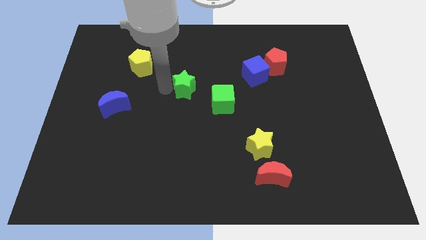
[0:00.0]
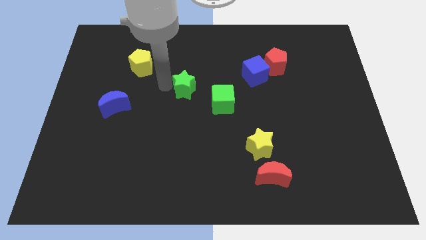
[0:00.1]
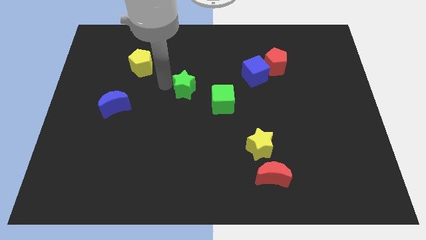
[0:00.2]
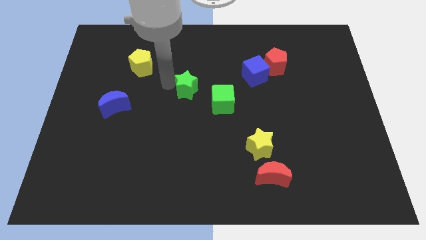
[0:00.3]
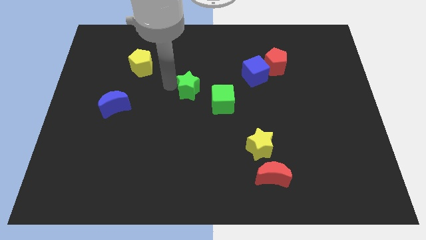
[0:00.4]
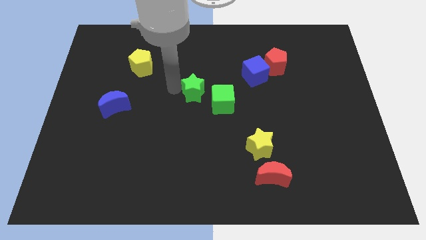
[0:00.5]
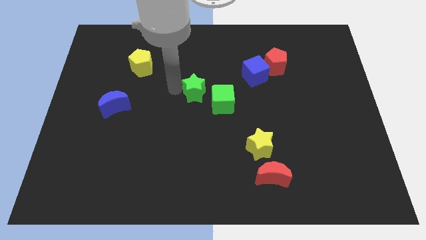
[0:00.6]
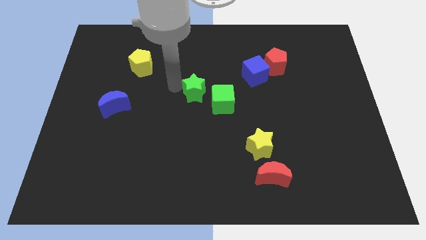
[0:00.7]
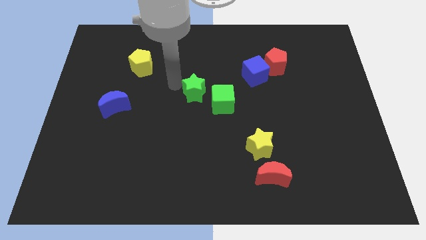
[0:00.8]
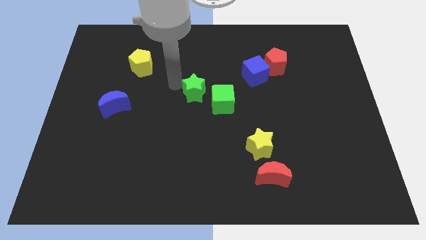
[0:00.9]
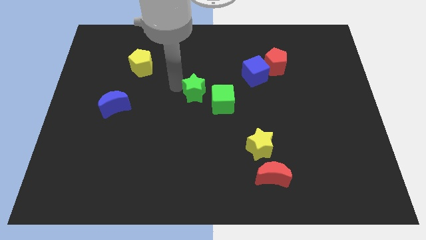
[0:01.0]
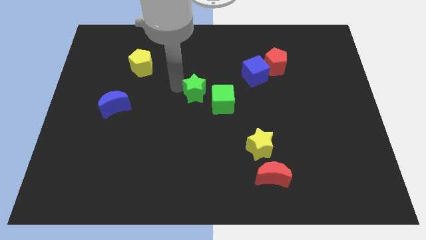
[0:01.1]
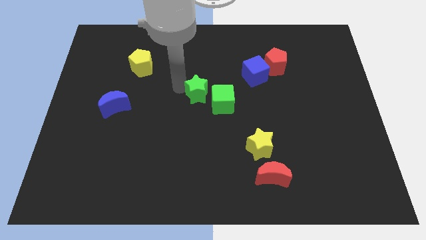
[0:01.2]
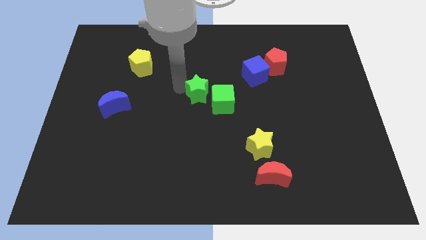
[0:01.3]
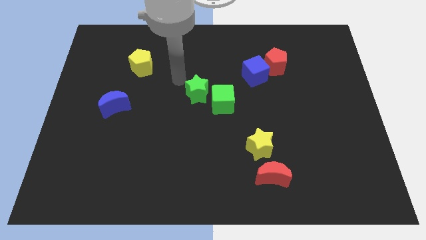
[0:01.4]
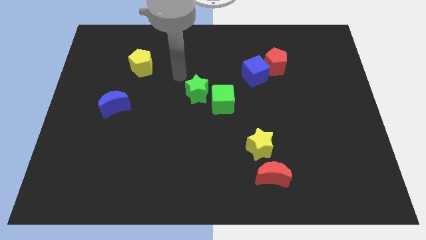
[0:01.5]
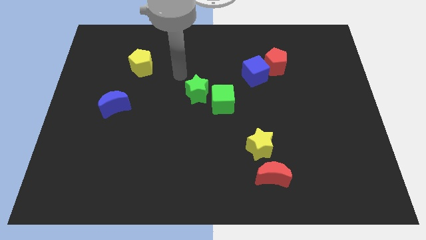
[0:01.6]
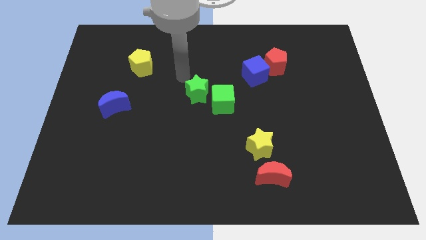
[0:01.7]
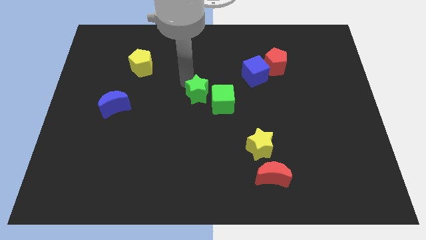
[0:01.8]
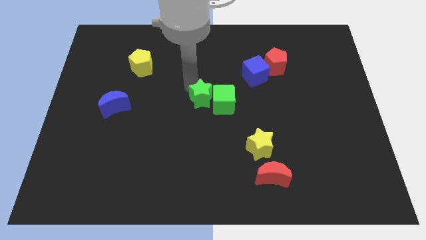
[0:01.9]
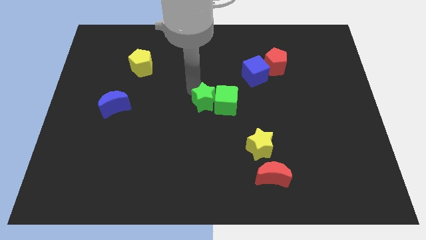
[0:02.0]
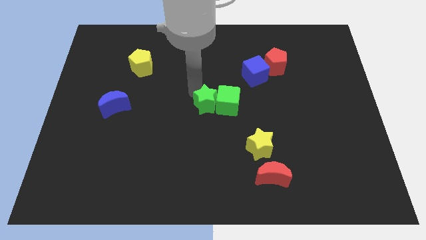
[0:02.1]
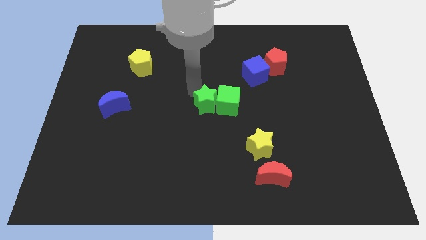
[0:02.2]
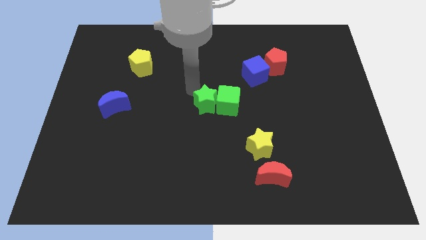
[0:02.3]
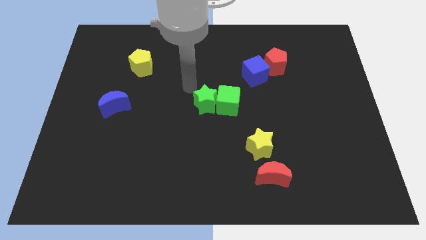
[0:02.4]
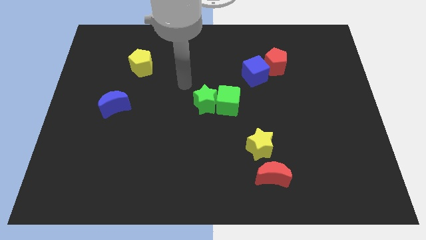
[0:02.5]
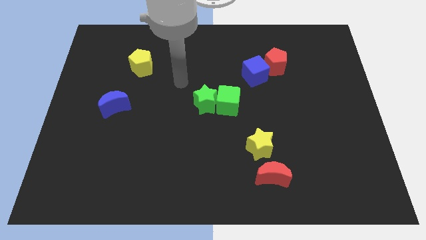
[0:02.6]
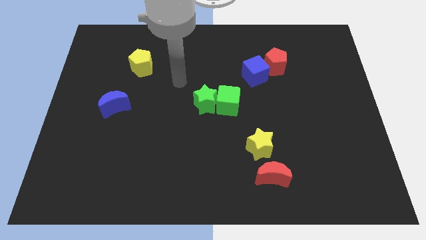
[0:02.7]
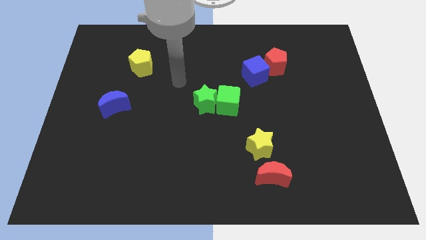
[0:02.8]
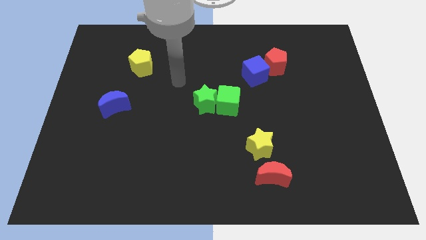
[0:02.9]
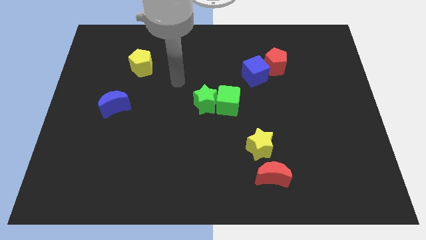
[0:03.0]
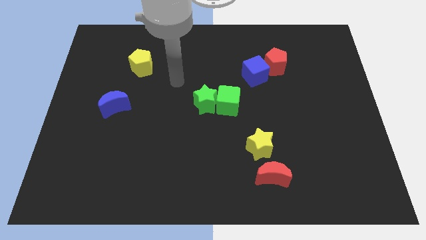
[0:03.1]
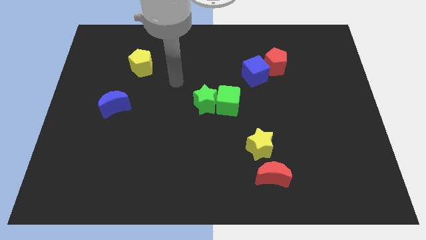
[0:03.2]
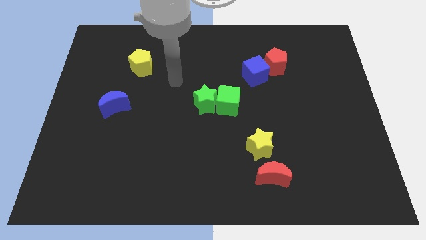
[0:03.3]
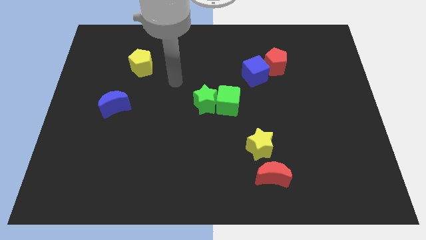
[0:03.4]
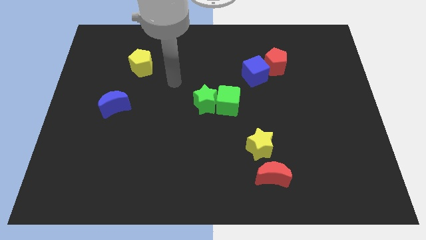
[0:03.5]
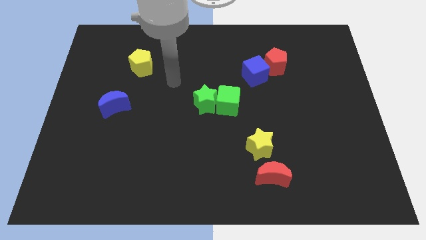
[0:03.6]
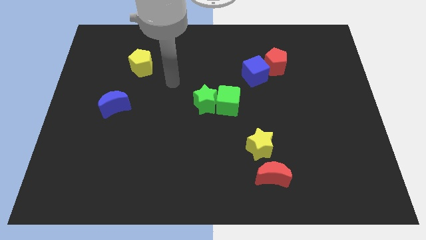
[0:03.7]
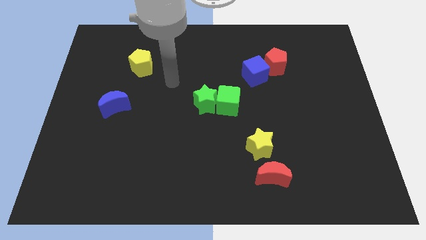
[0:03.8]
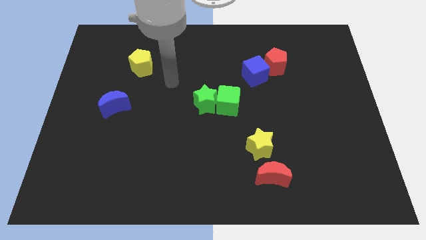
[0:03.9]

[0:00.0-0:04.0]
push the green star into the blue cube

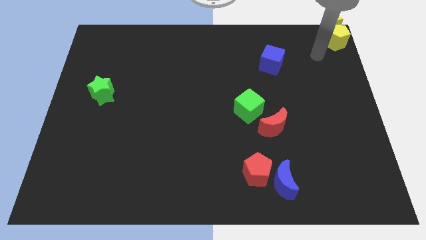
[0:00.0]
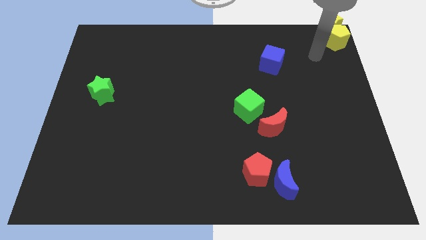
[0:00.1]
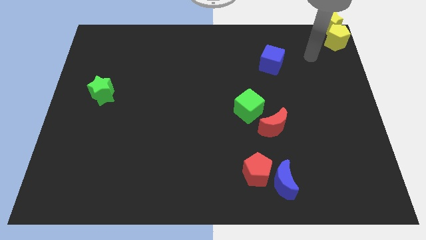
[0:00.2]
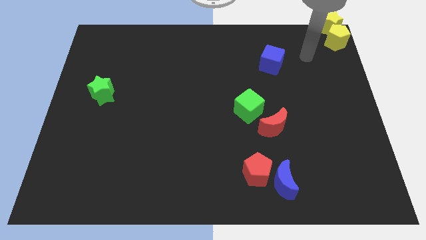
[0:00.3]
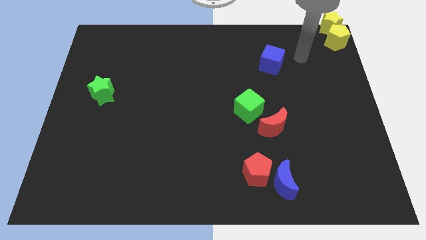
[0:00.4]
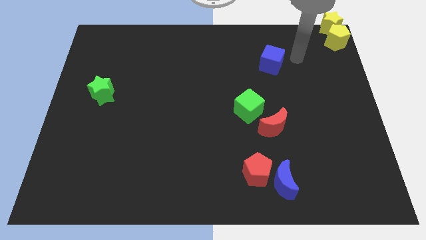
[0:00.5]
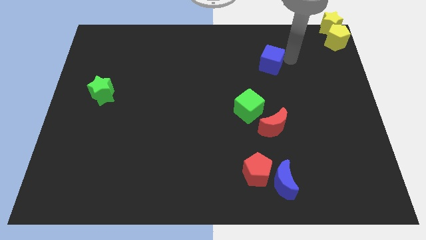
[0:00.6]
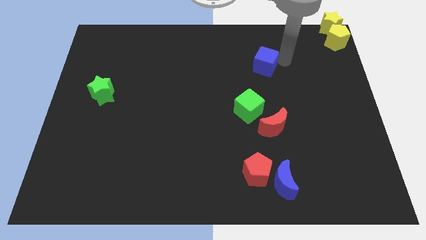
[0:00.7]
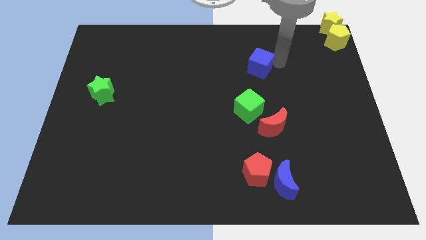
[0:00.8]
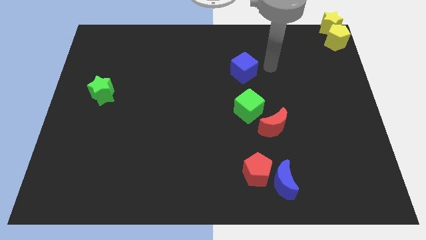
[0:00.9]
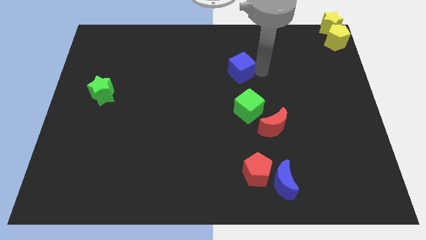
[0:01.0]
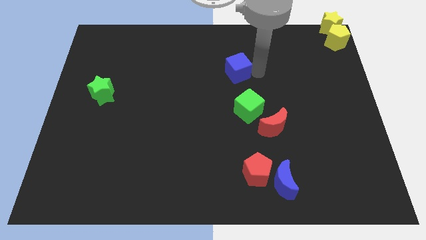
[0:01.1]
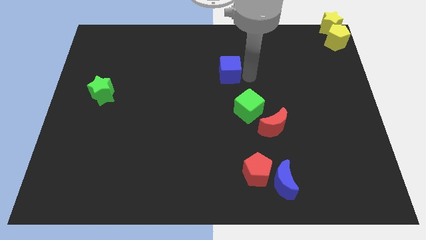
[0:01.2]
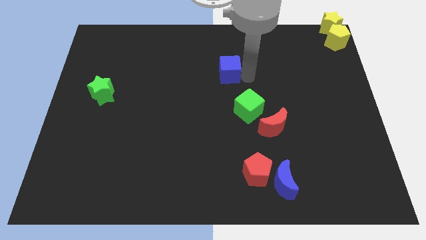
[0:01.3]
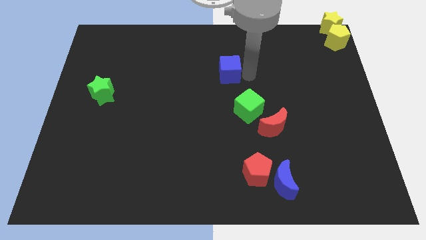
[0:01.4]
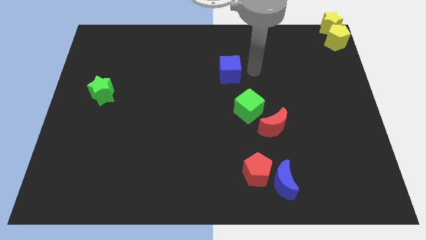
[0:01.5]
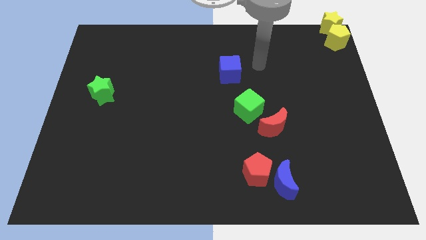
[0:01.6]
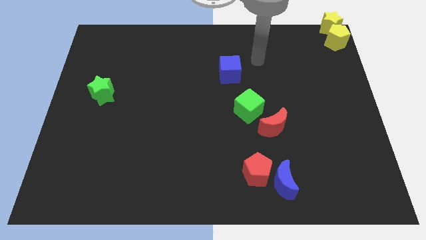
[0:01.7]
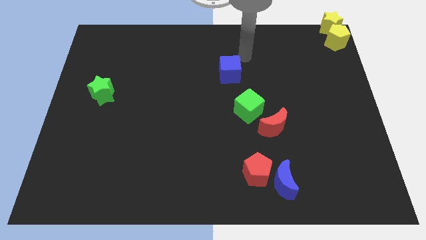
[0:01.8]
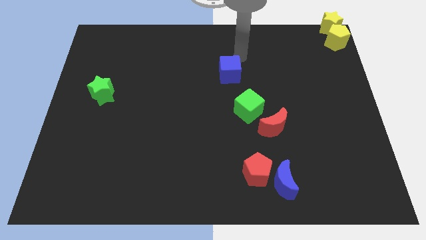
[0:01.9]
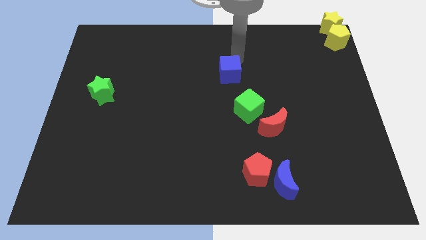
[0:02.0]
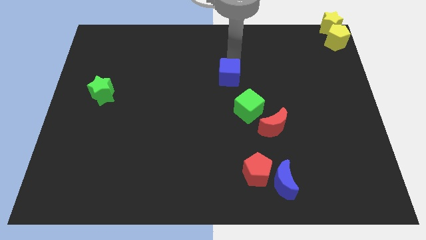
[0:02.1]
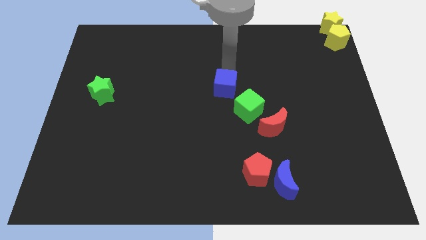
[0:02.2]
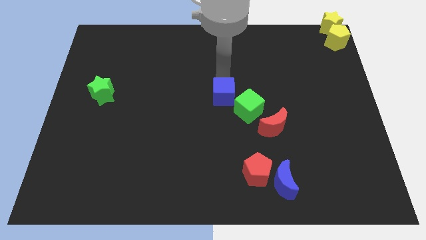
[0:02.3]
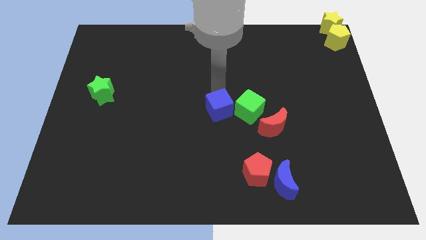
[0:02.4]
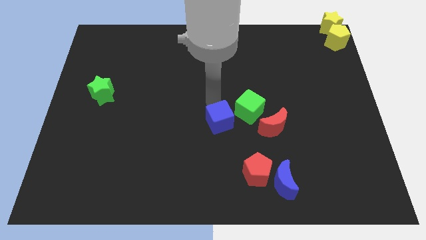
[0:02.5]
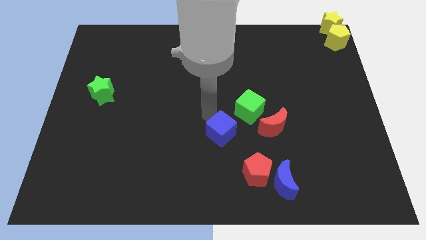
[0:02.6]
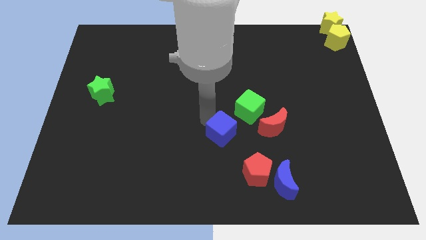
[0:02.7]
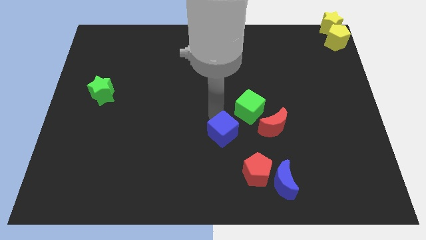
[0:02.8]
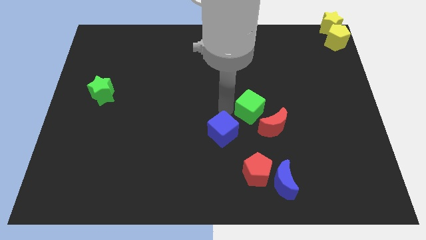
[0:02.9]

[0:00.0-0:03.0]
place blue cube near green cube

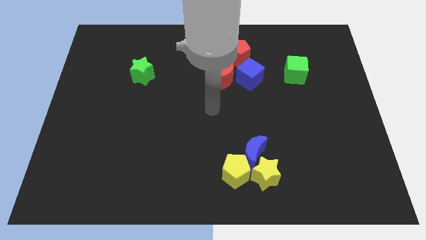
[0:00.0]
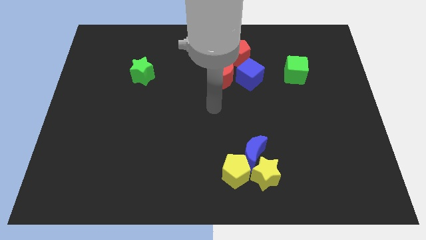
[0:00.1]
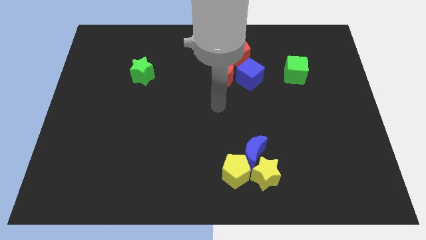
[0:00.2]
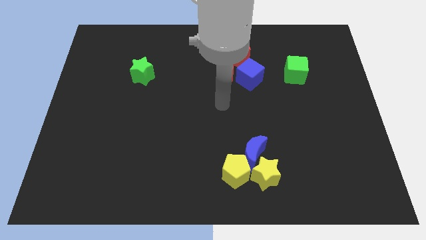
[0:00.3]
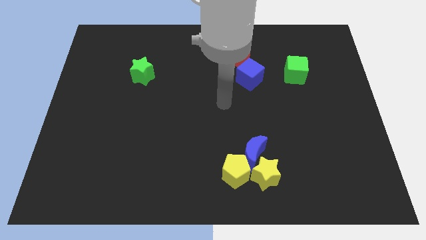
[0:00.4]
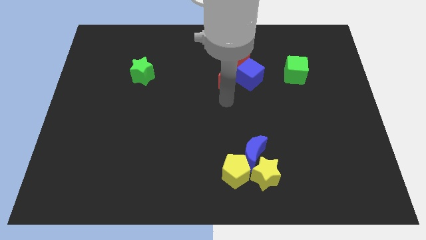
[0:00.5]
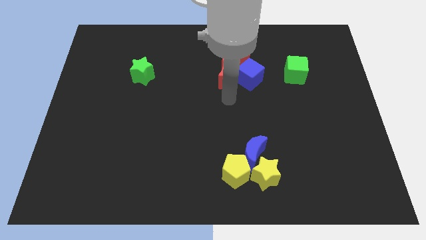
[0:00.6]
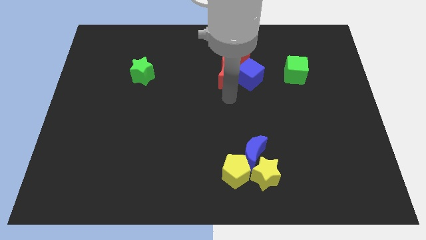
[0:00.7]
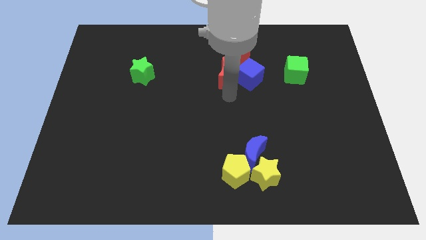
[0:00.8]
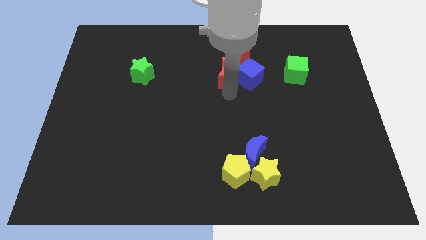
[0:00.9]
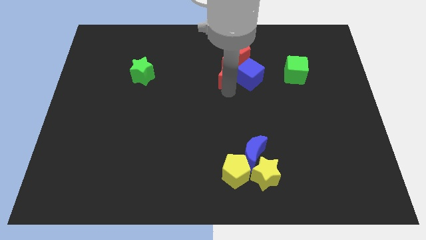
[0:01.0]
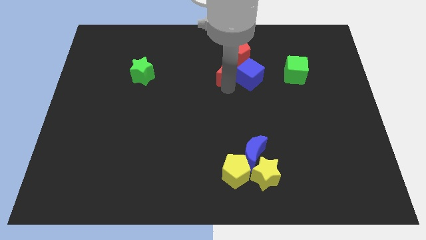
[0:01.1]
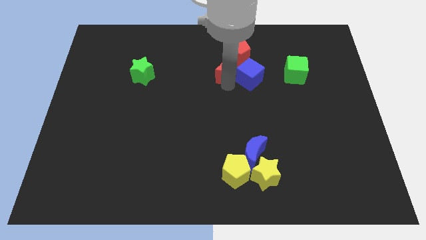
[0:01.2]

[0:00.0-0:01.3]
place the arm to the bottom of the red crescent

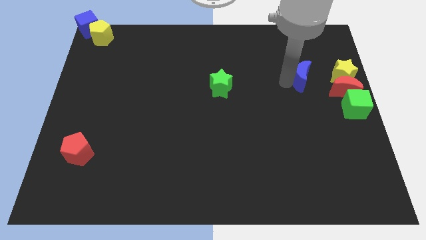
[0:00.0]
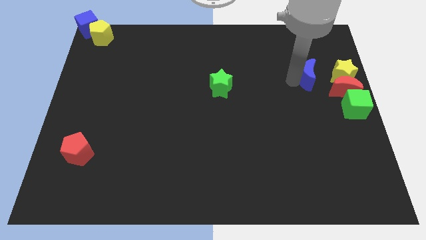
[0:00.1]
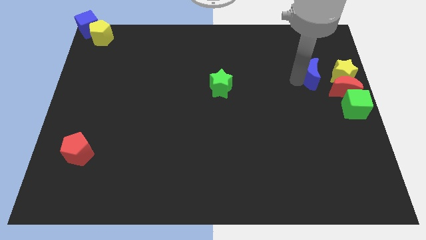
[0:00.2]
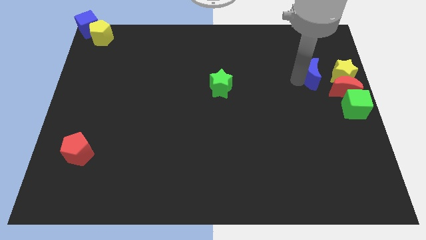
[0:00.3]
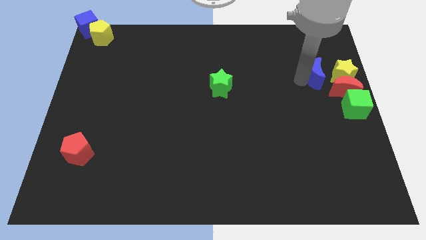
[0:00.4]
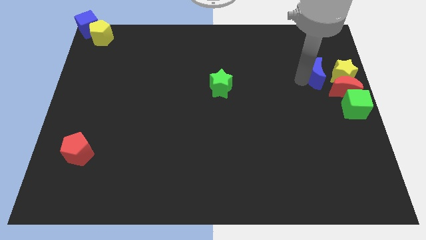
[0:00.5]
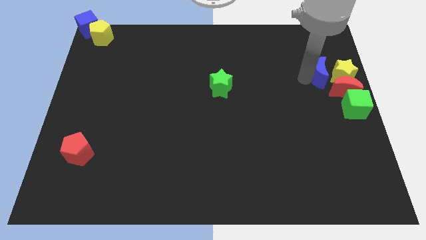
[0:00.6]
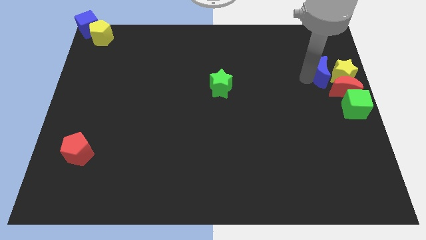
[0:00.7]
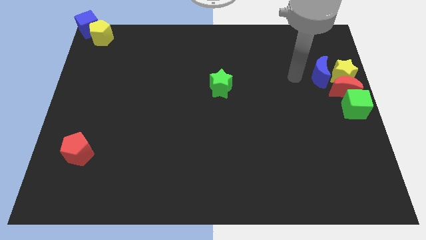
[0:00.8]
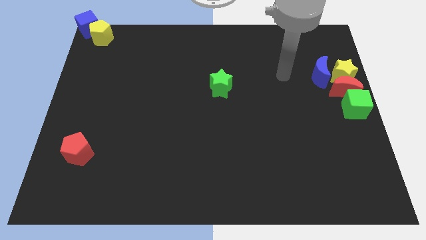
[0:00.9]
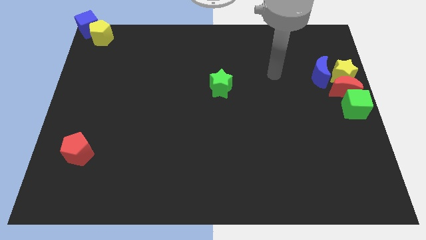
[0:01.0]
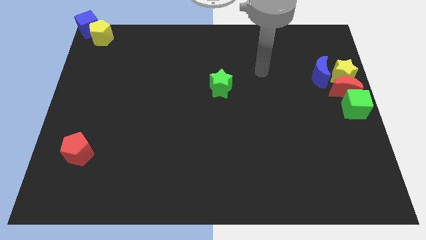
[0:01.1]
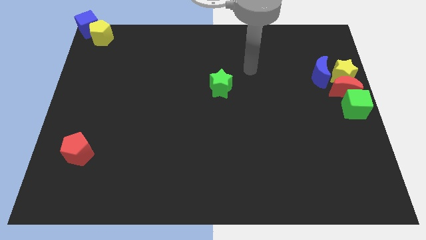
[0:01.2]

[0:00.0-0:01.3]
place the blue crescent left to the yellow star
